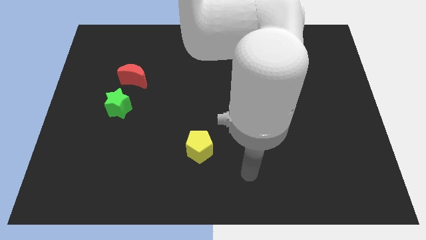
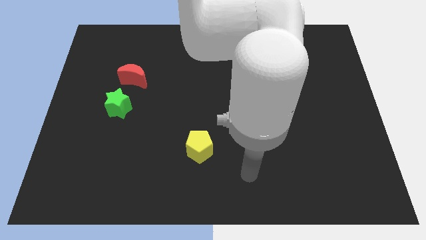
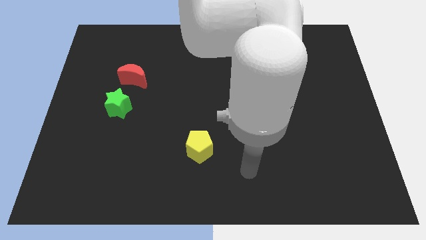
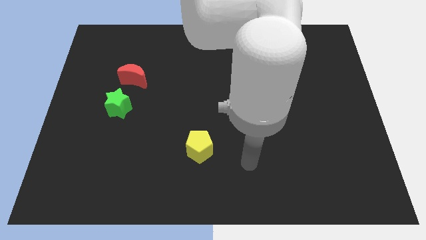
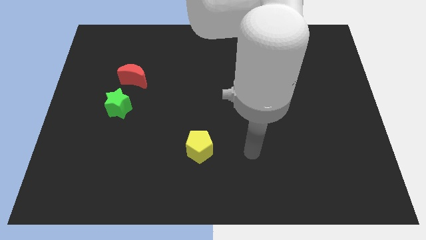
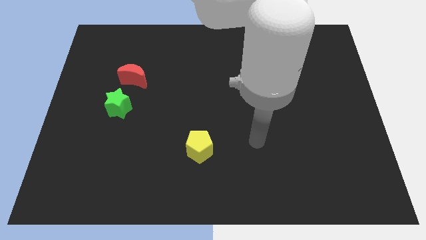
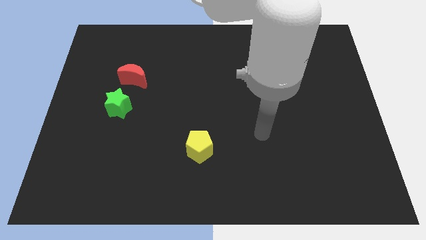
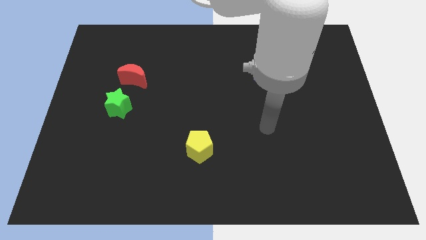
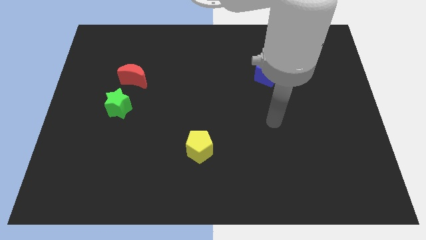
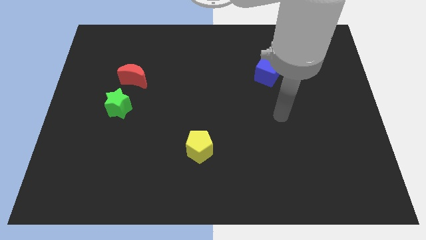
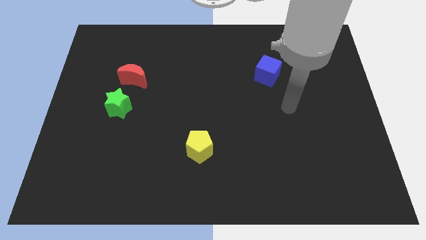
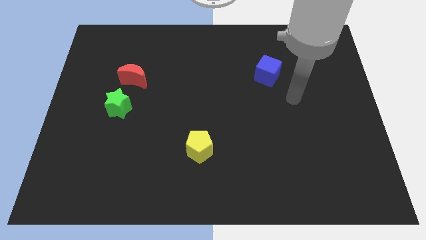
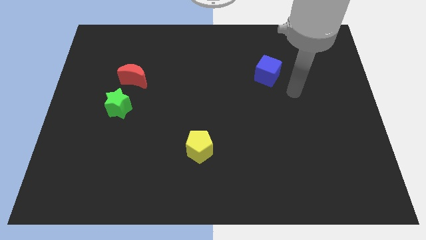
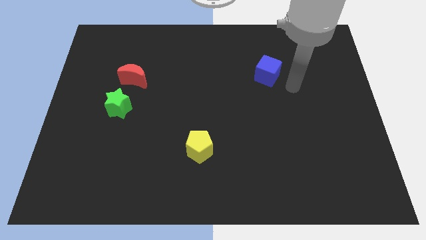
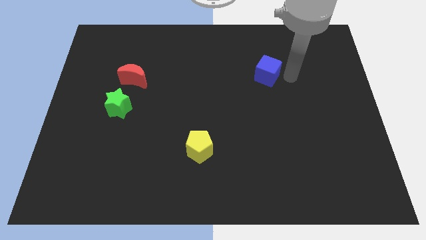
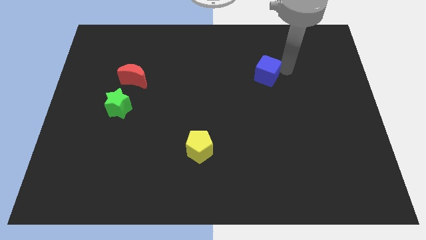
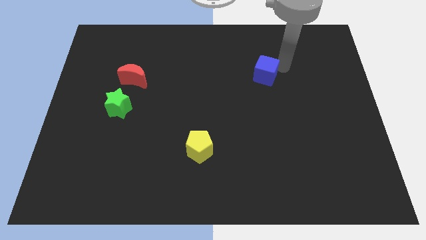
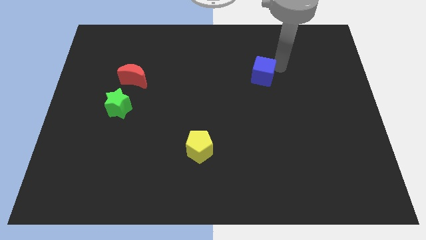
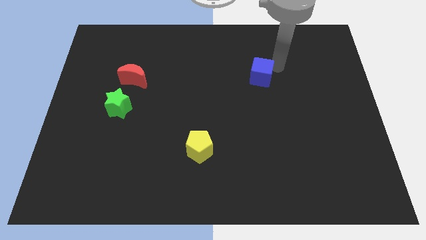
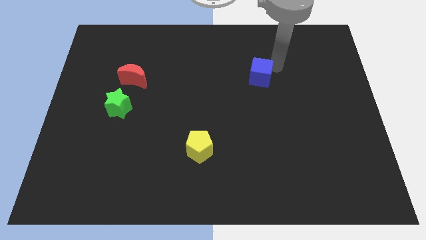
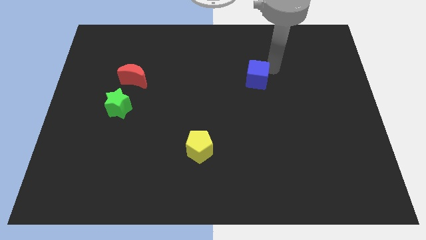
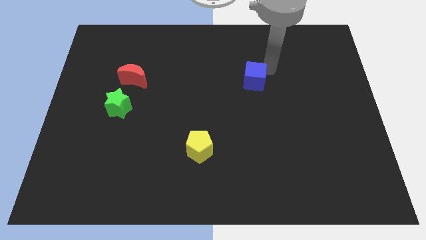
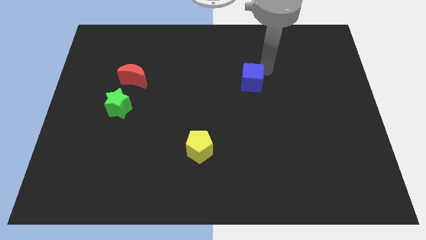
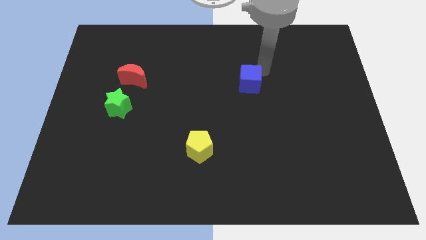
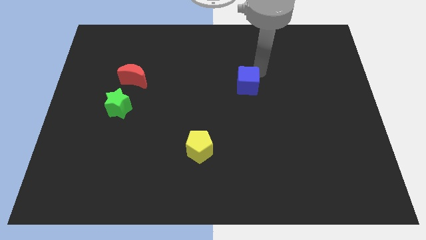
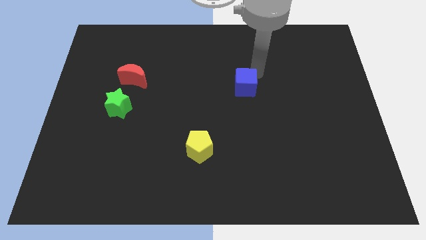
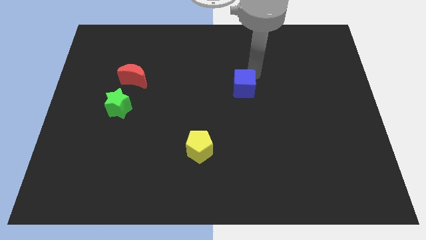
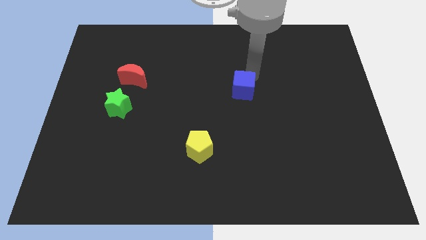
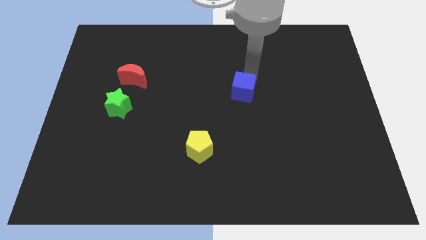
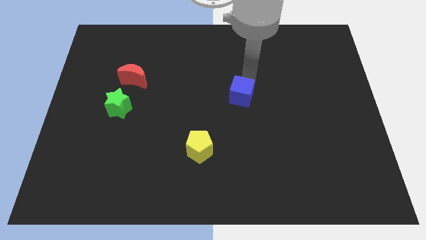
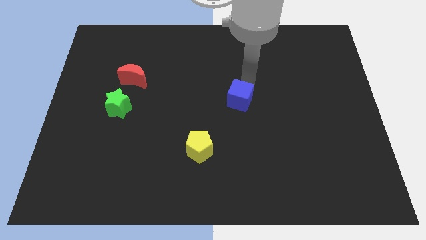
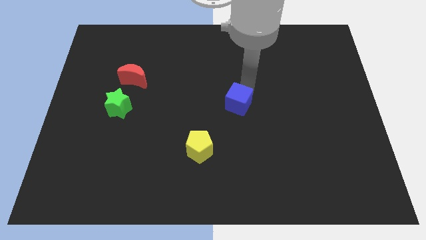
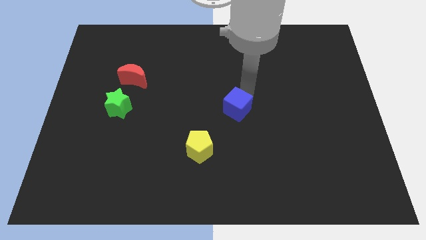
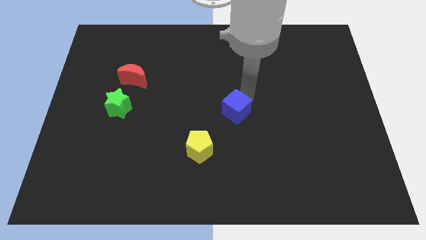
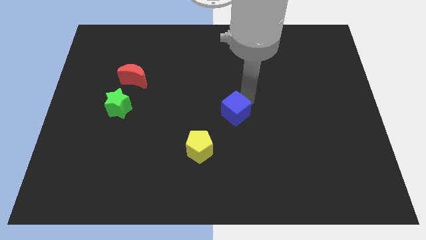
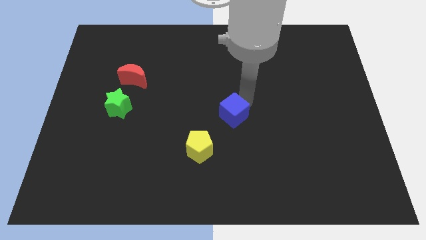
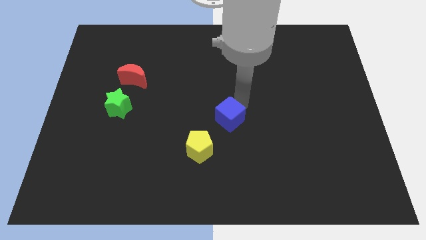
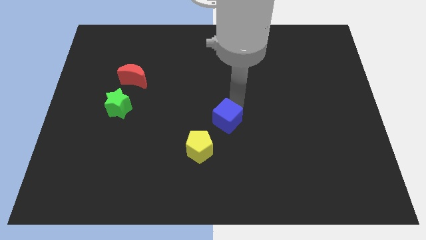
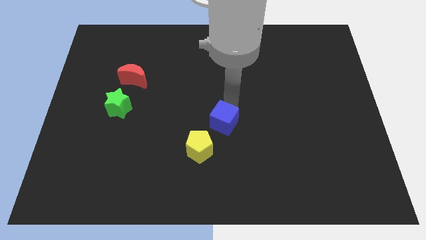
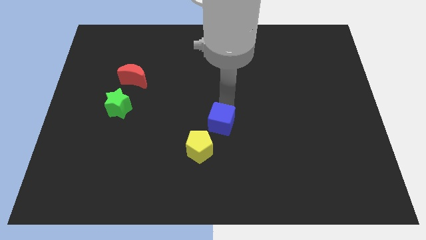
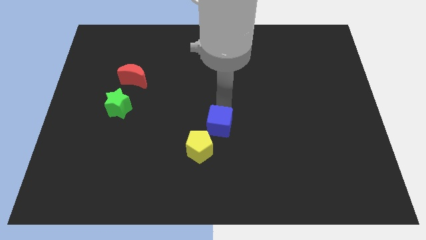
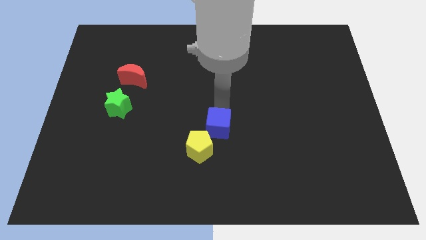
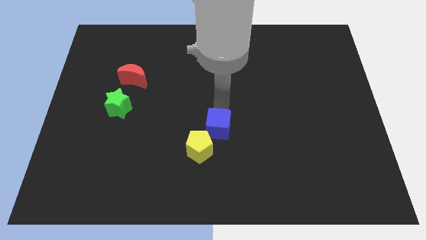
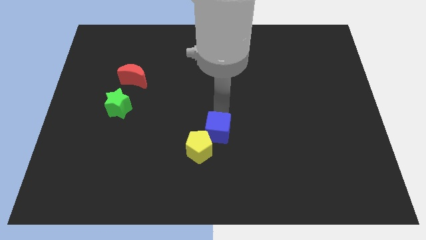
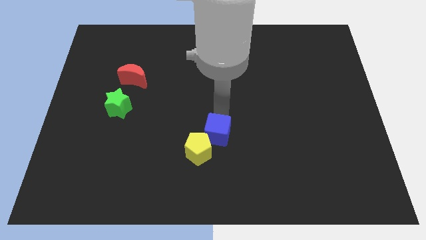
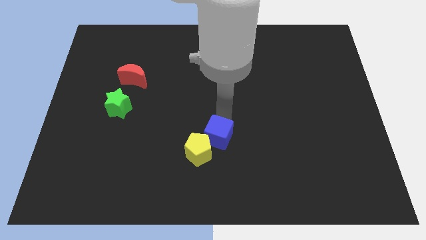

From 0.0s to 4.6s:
move the cube to the yellow block

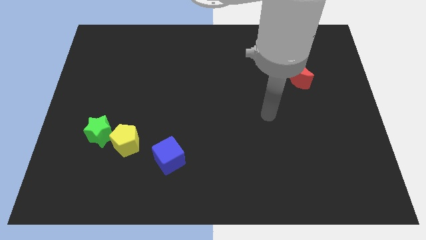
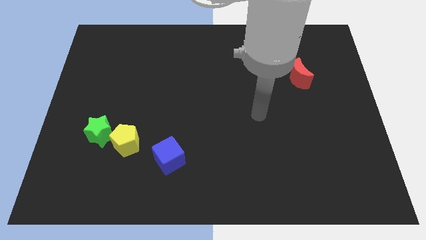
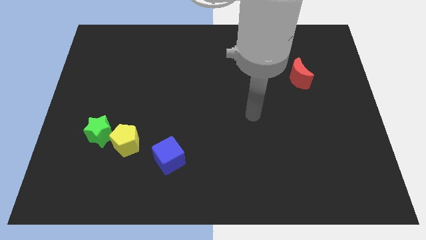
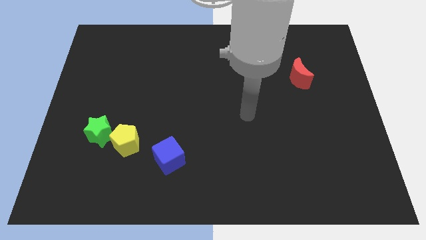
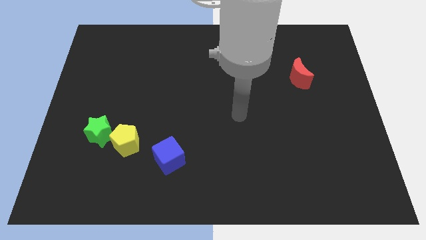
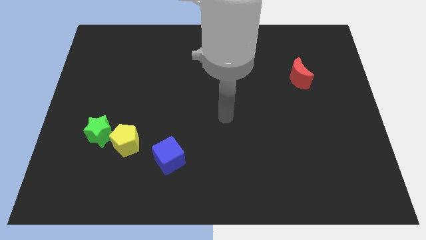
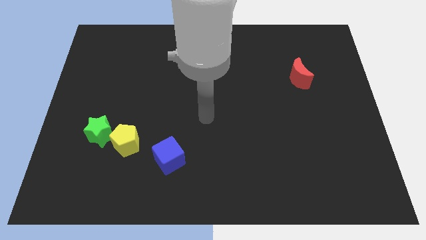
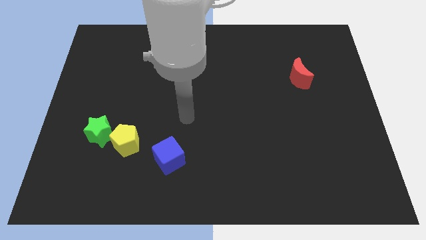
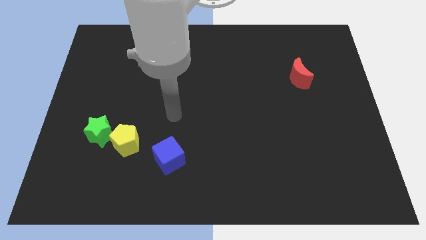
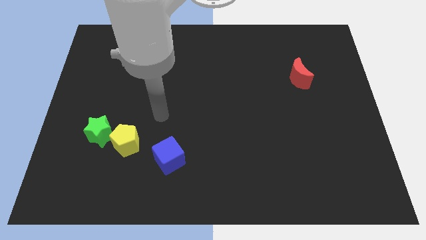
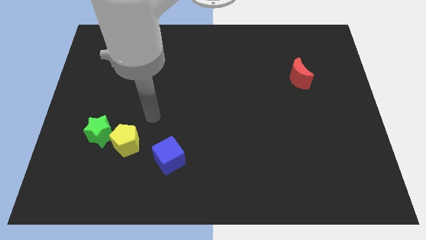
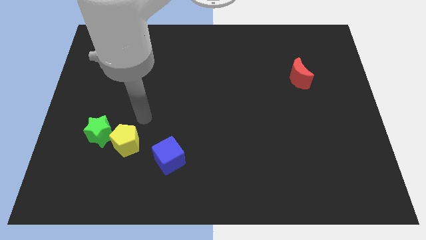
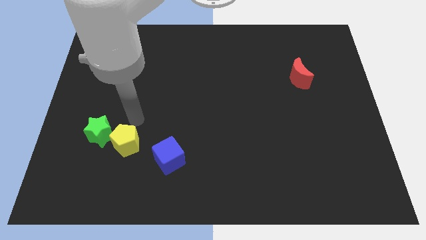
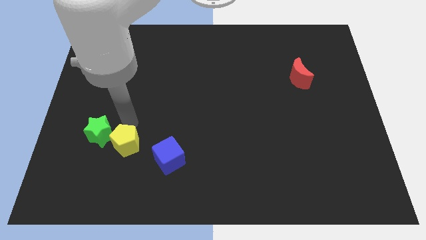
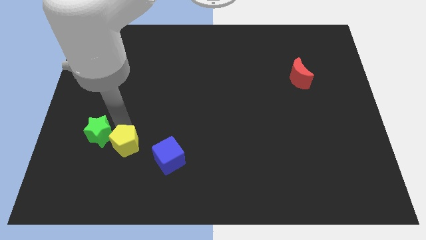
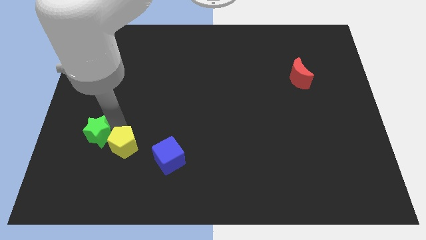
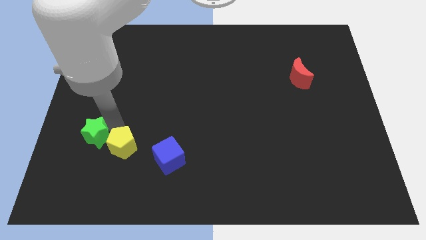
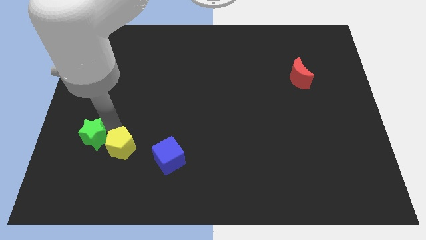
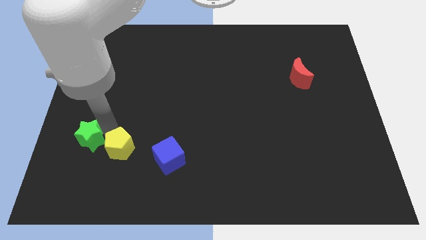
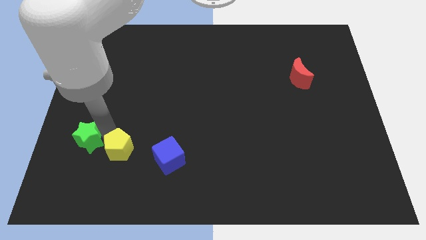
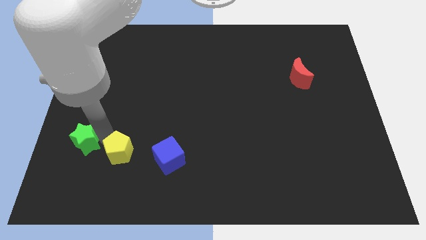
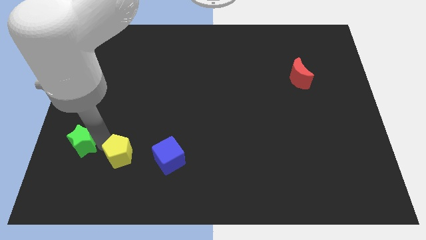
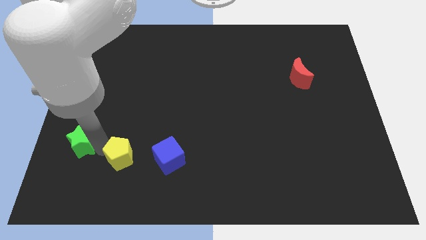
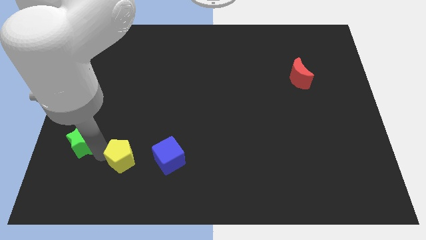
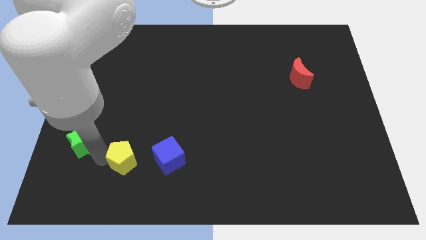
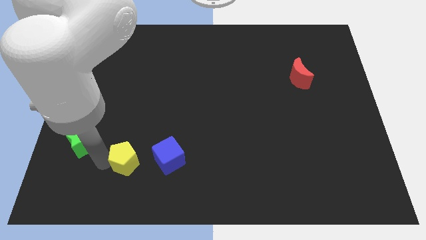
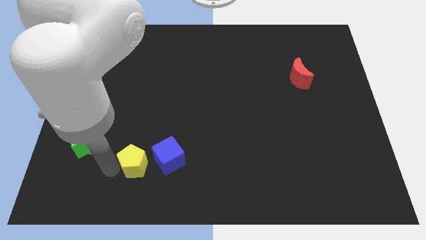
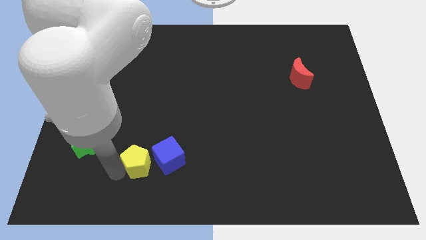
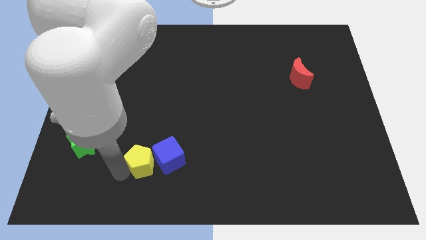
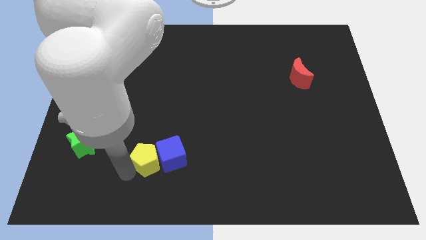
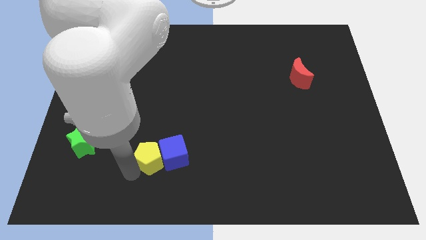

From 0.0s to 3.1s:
push the yellow pentagon to the blue block

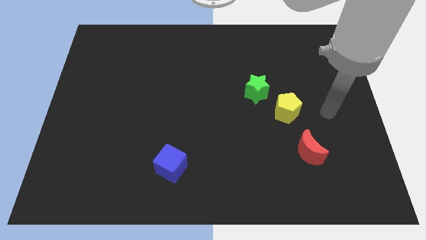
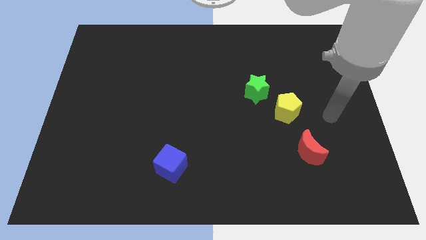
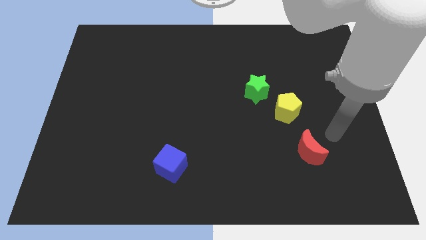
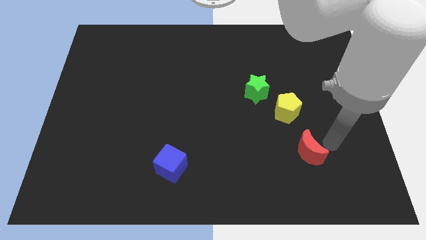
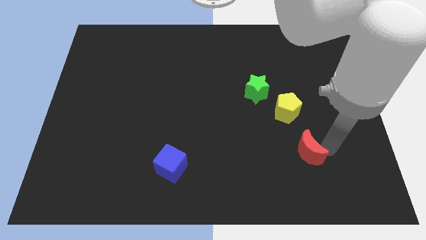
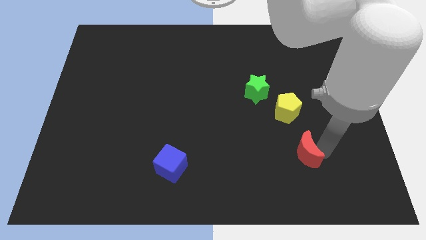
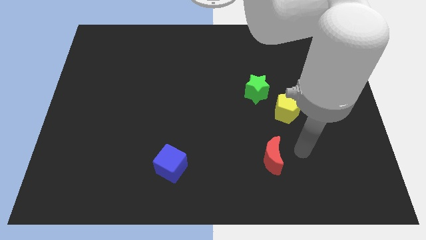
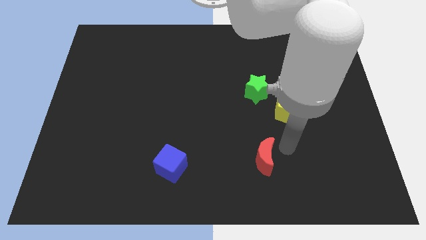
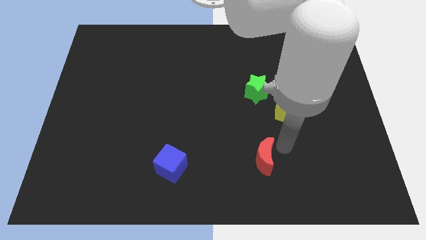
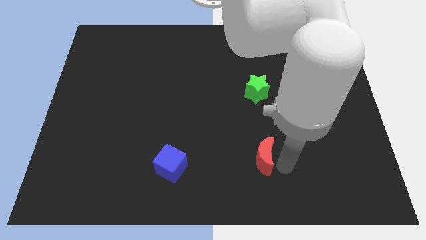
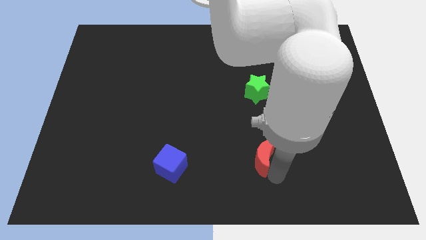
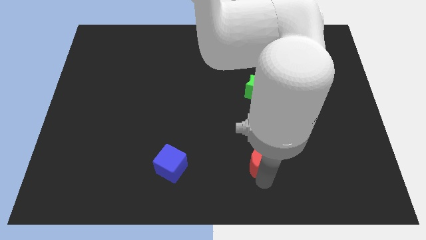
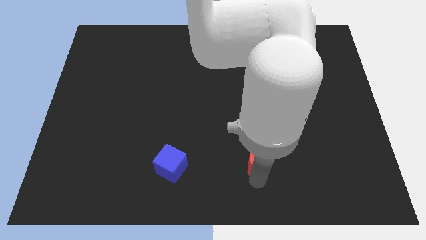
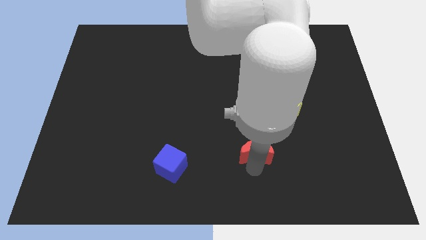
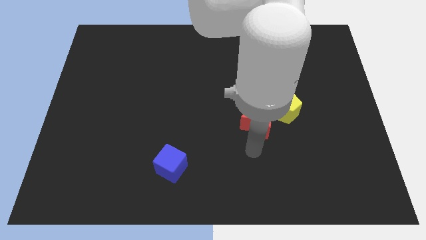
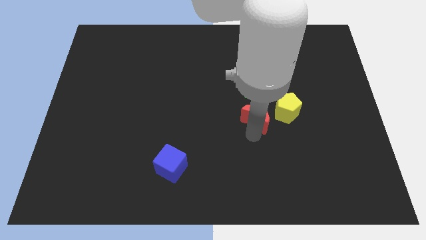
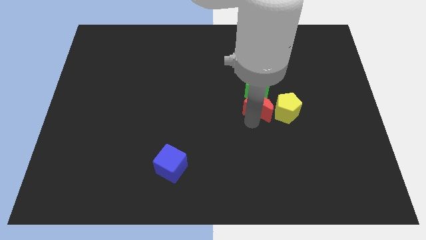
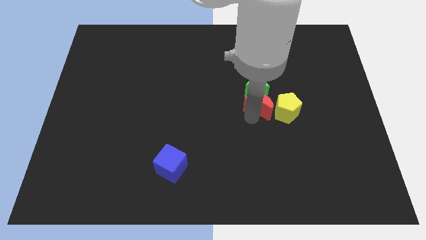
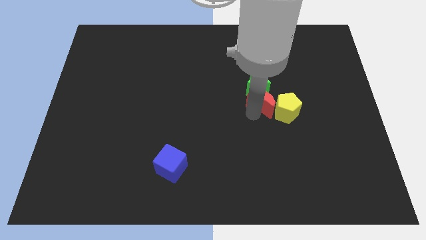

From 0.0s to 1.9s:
put the red moon next to the green star
